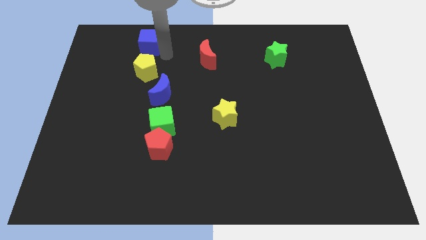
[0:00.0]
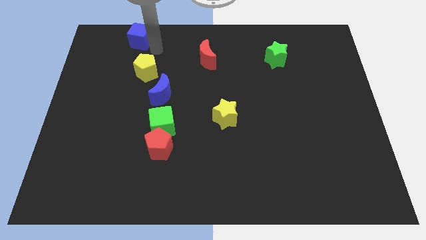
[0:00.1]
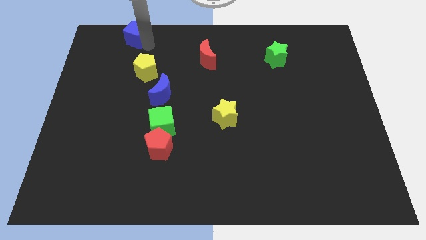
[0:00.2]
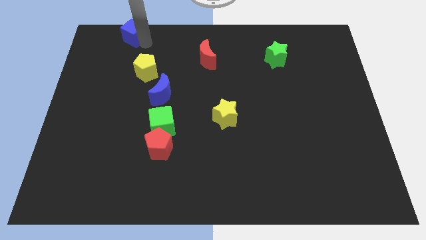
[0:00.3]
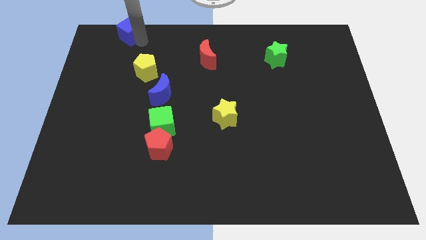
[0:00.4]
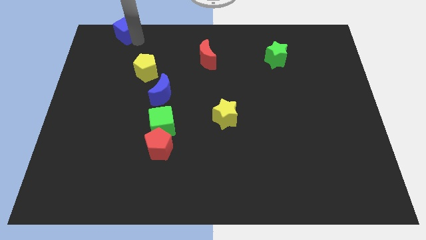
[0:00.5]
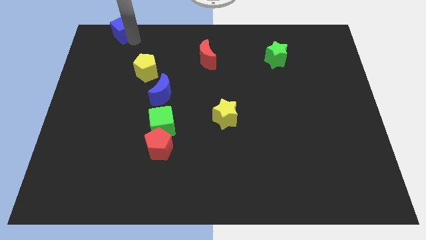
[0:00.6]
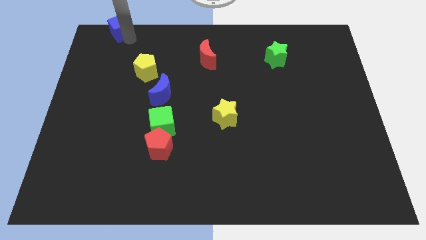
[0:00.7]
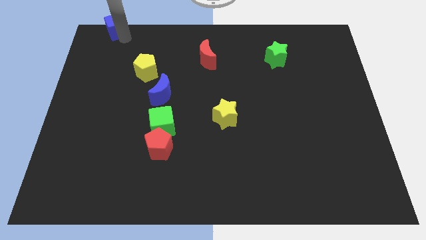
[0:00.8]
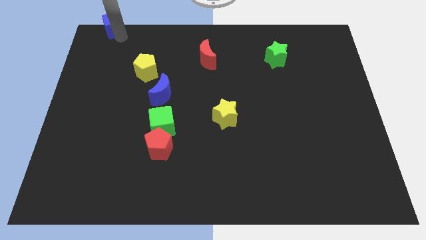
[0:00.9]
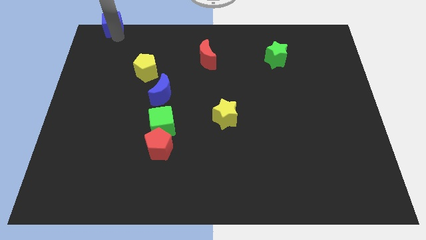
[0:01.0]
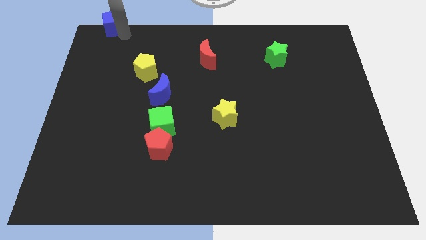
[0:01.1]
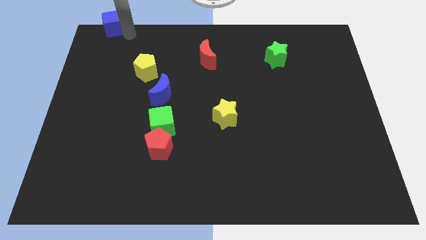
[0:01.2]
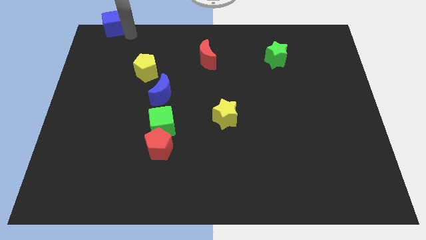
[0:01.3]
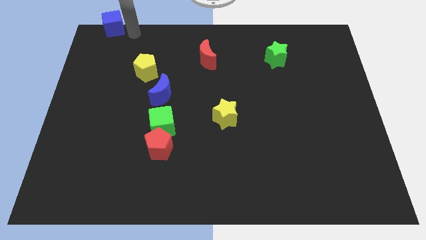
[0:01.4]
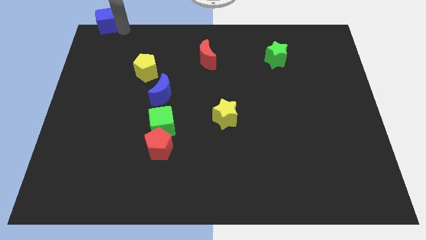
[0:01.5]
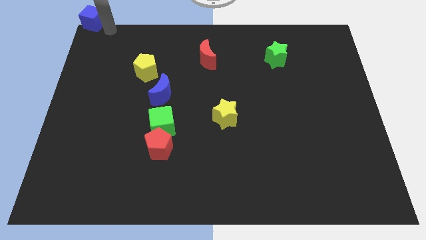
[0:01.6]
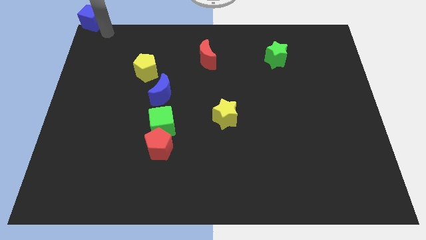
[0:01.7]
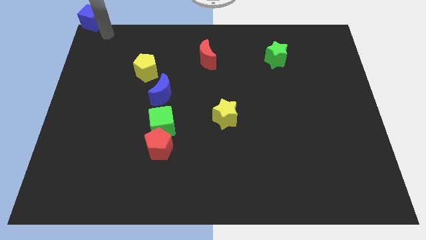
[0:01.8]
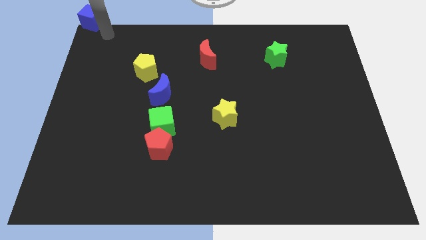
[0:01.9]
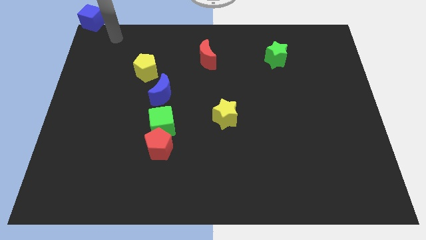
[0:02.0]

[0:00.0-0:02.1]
slide blue cube to the top left of the board

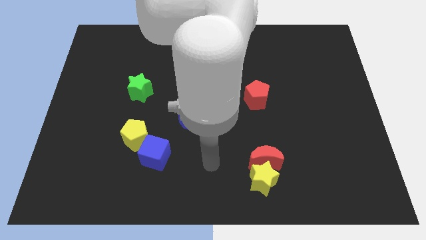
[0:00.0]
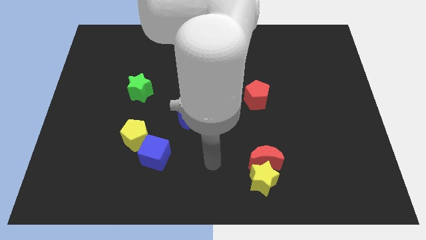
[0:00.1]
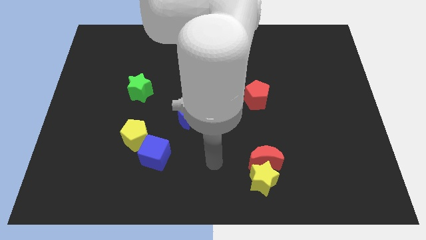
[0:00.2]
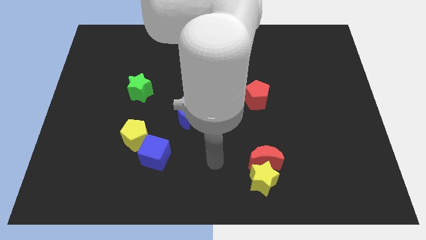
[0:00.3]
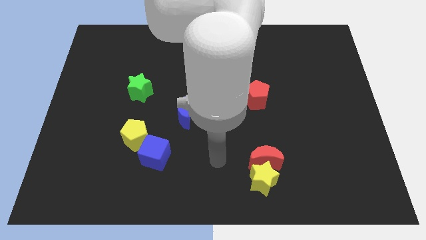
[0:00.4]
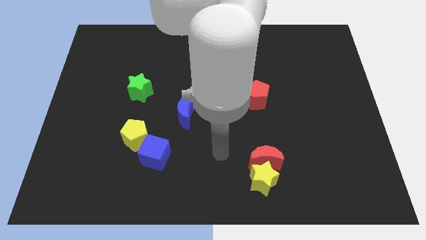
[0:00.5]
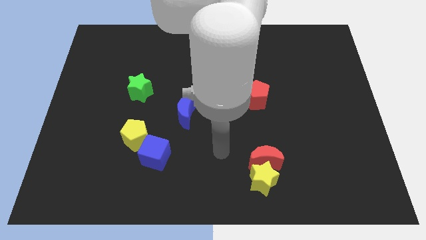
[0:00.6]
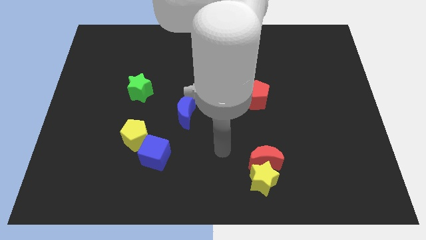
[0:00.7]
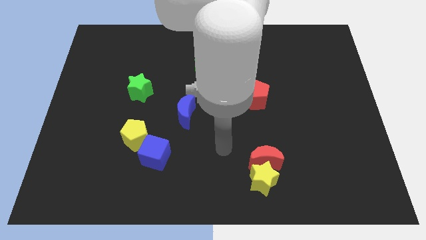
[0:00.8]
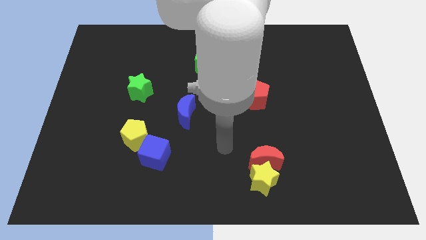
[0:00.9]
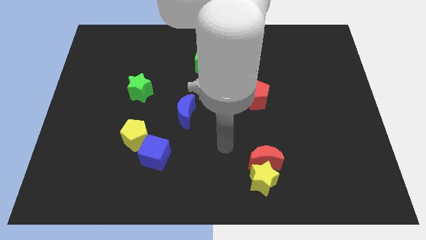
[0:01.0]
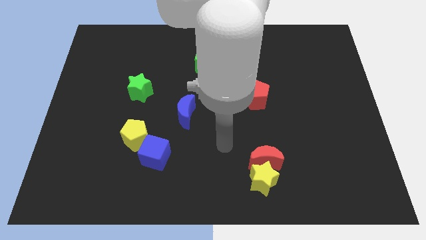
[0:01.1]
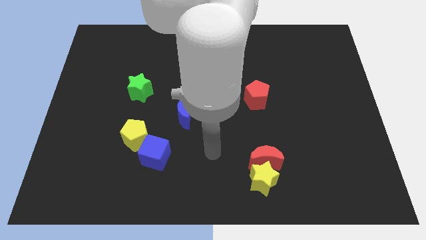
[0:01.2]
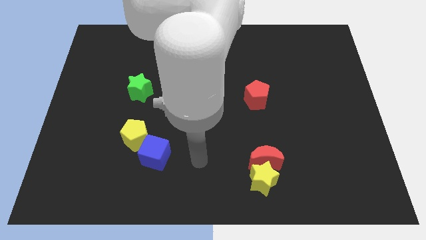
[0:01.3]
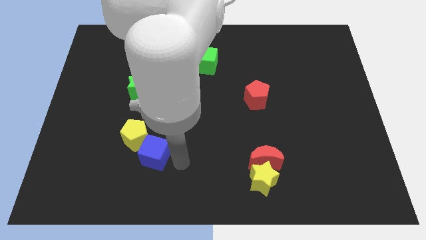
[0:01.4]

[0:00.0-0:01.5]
point the arm to the right of the blue cube

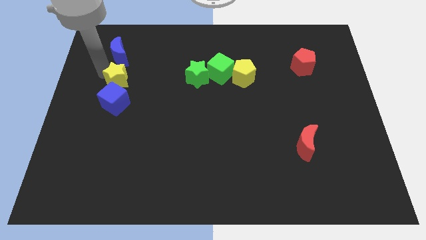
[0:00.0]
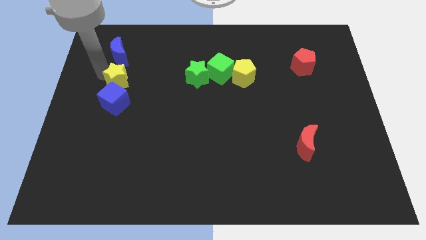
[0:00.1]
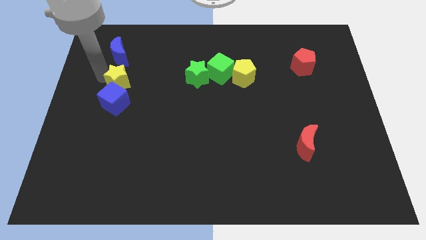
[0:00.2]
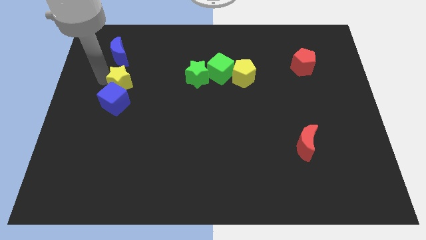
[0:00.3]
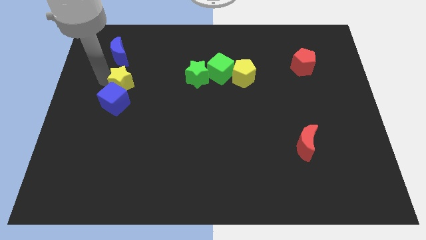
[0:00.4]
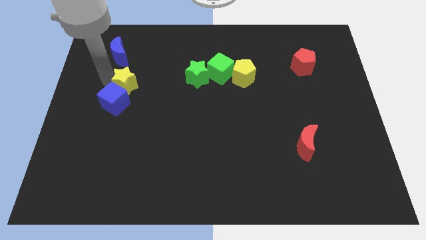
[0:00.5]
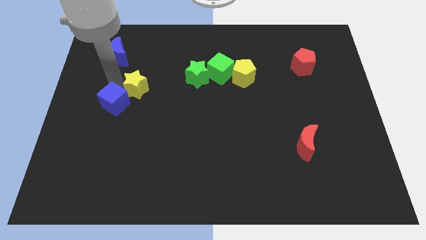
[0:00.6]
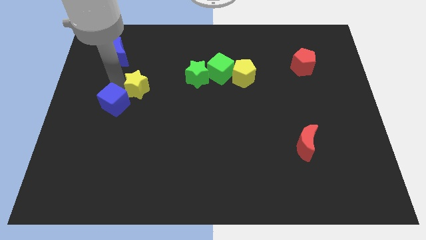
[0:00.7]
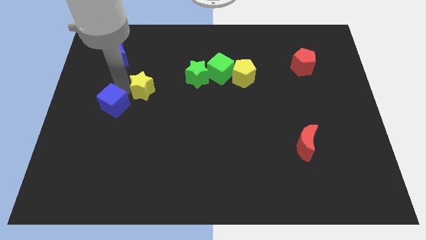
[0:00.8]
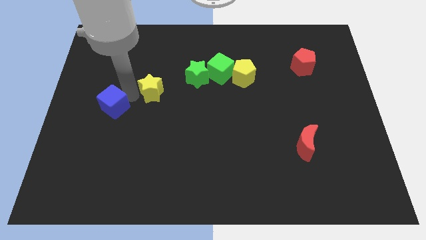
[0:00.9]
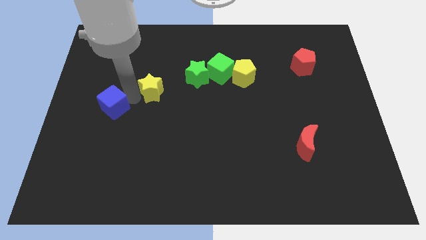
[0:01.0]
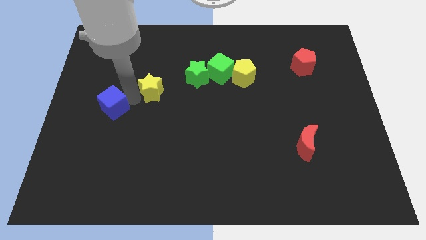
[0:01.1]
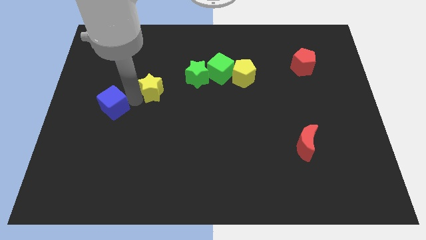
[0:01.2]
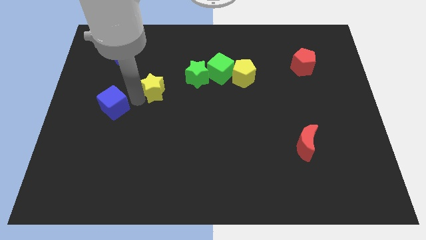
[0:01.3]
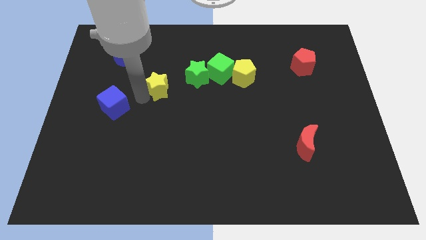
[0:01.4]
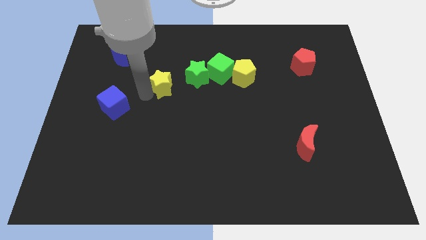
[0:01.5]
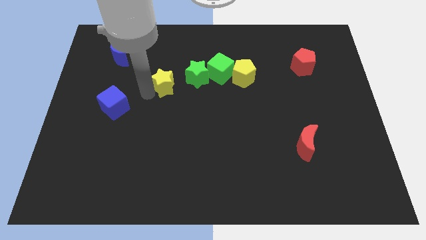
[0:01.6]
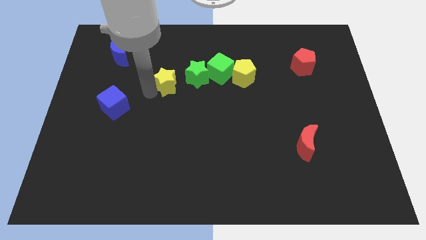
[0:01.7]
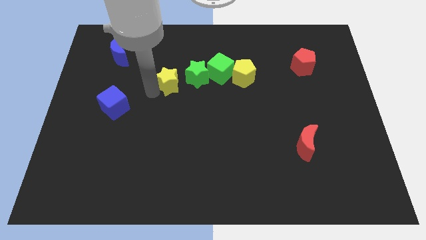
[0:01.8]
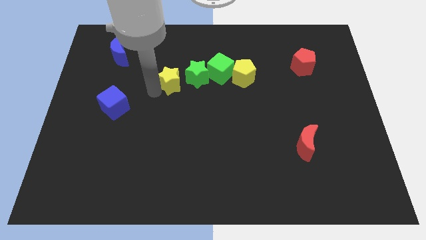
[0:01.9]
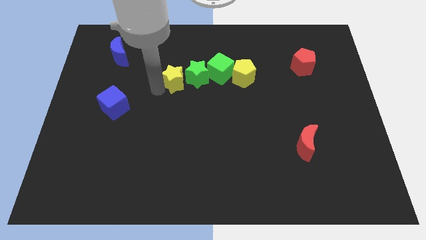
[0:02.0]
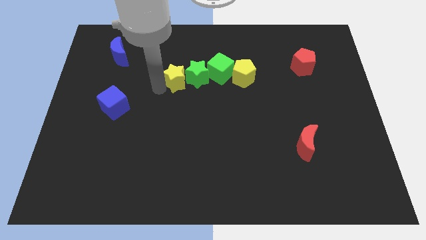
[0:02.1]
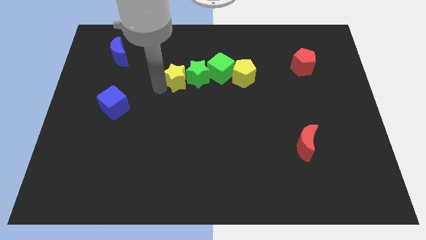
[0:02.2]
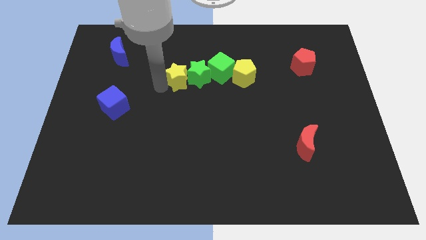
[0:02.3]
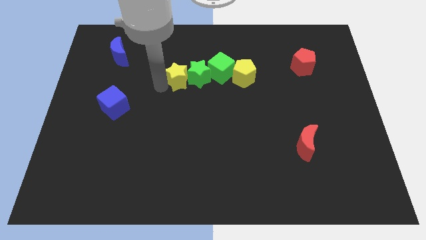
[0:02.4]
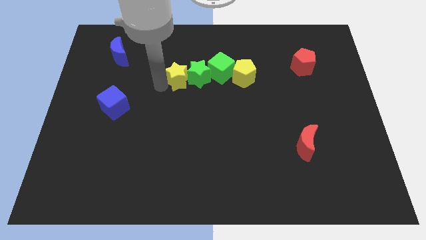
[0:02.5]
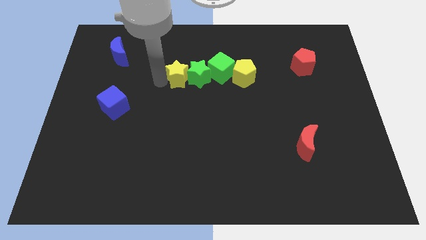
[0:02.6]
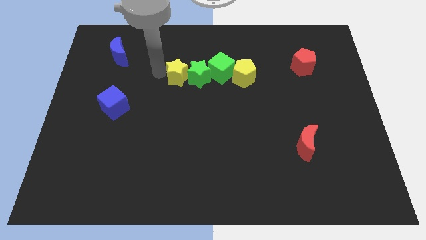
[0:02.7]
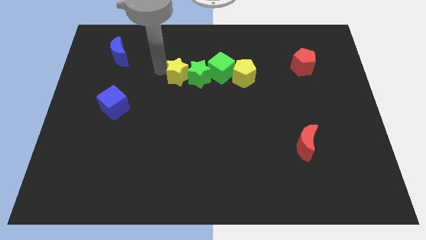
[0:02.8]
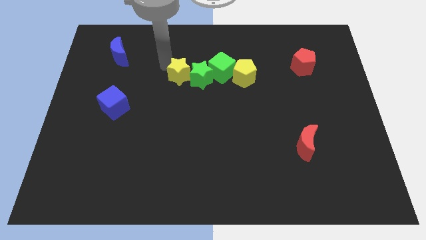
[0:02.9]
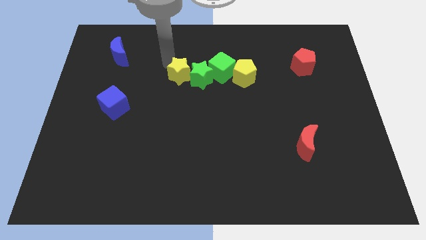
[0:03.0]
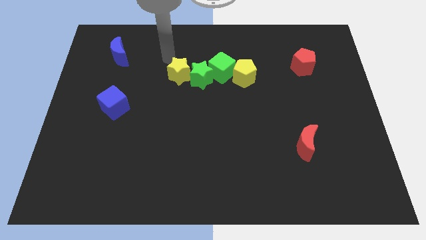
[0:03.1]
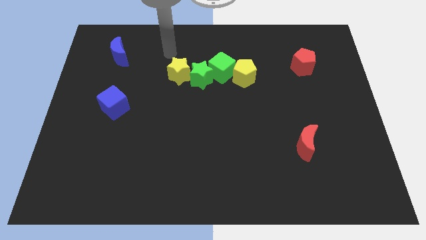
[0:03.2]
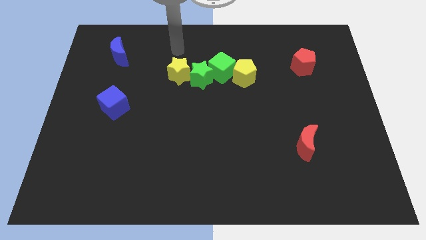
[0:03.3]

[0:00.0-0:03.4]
push the yellow star into the left side of the green star

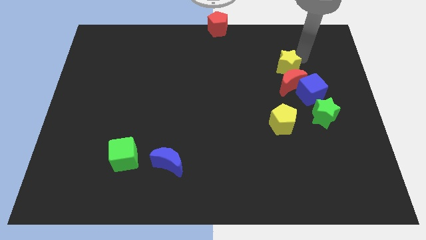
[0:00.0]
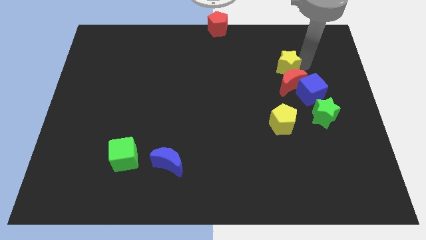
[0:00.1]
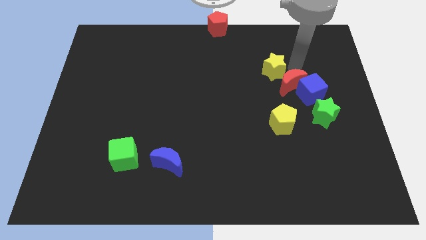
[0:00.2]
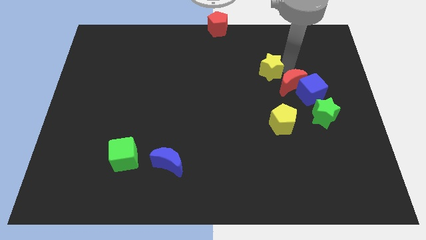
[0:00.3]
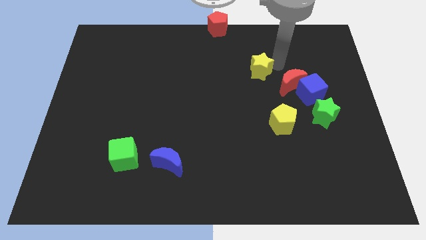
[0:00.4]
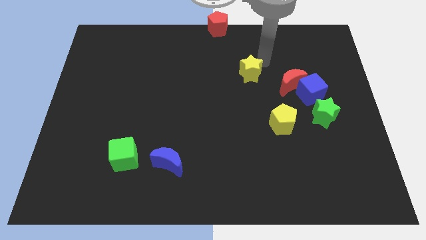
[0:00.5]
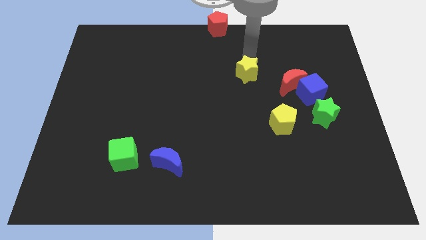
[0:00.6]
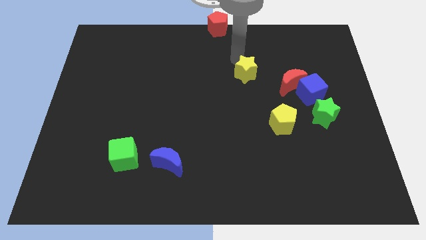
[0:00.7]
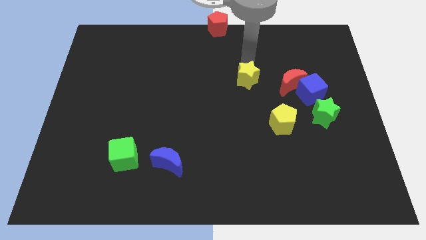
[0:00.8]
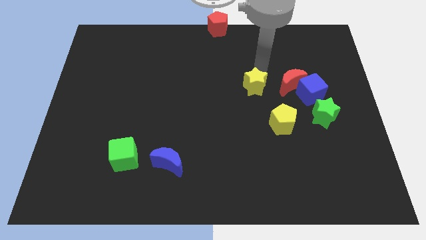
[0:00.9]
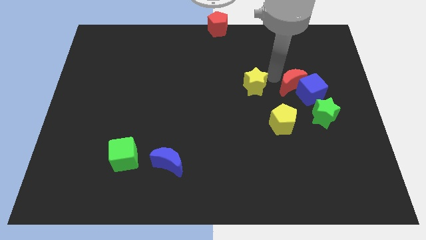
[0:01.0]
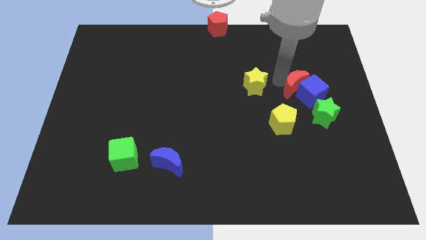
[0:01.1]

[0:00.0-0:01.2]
move the yellow star away from the red moon

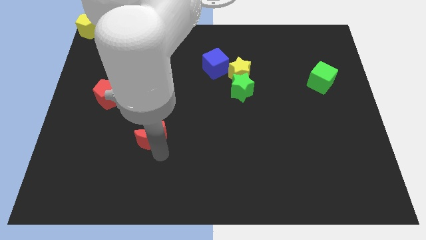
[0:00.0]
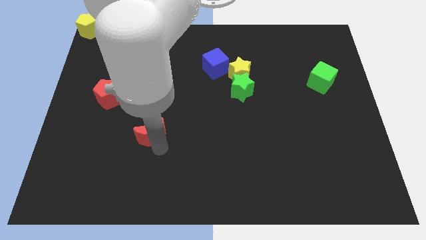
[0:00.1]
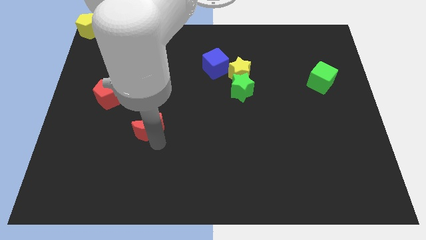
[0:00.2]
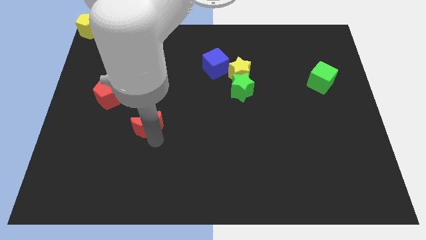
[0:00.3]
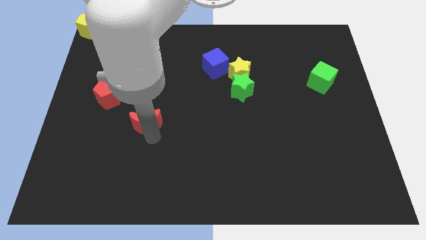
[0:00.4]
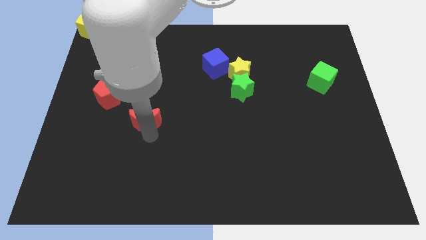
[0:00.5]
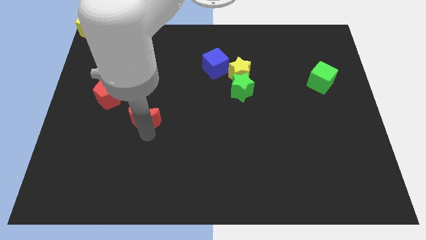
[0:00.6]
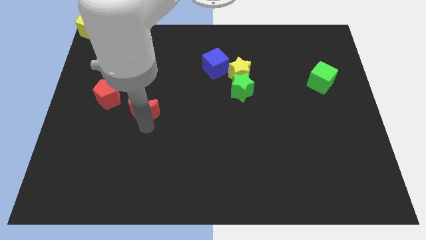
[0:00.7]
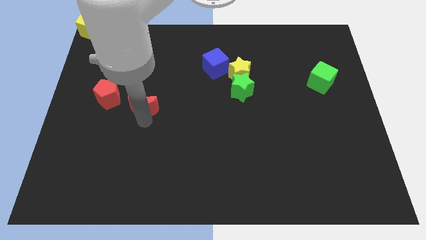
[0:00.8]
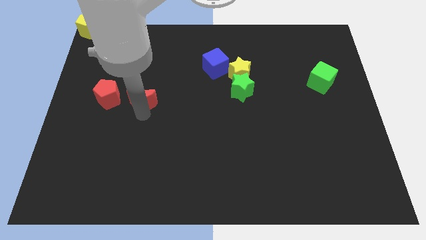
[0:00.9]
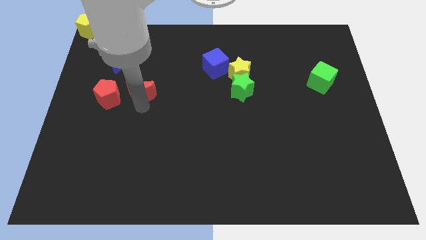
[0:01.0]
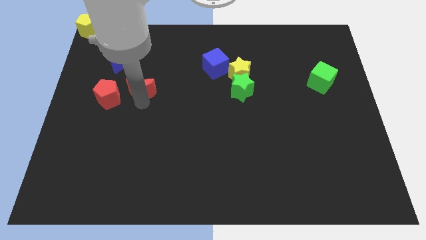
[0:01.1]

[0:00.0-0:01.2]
place red moon to the right of red pentagon
